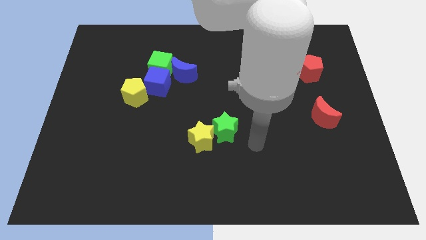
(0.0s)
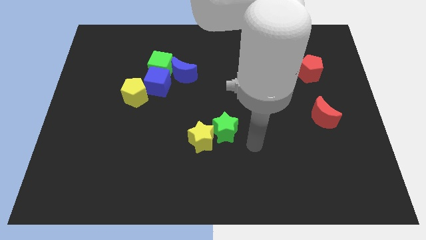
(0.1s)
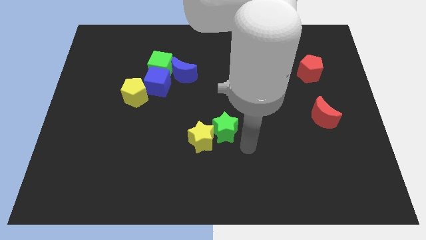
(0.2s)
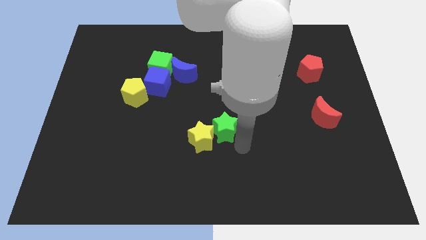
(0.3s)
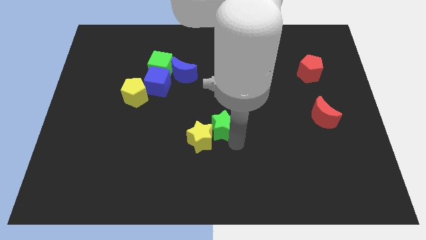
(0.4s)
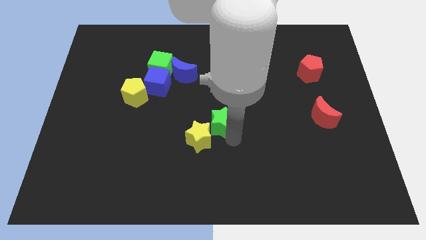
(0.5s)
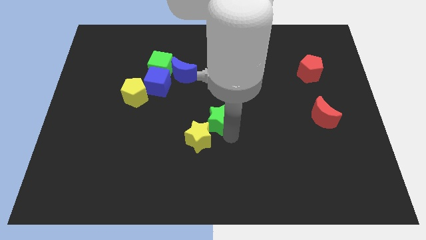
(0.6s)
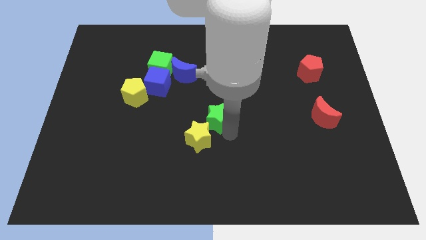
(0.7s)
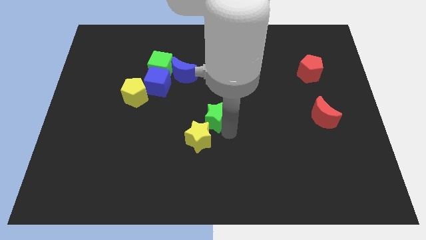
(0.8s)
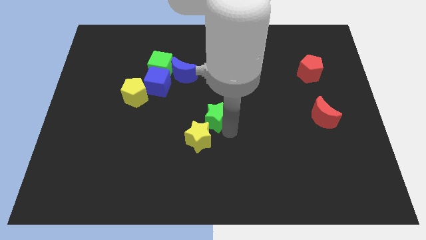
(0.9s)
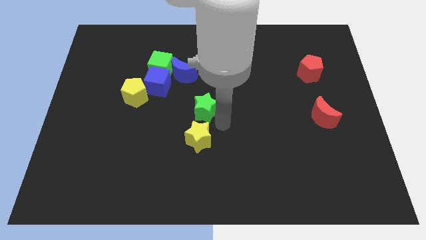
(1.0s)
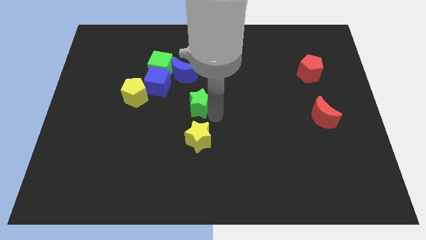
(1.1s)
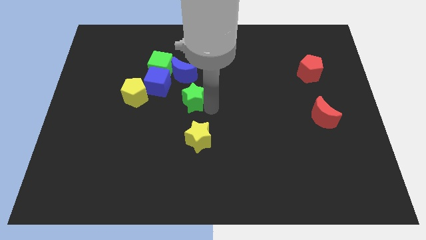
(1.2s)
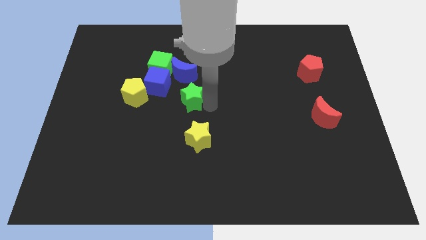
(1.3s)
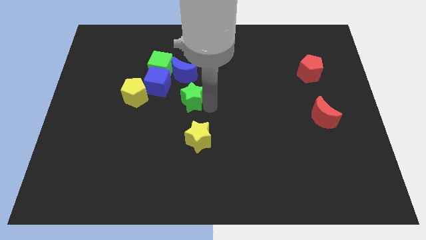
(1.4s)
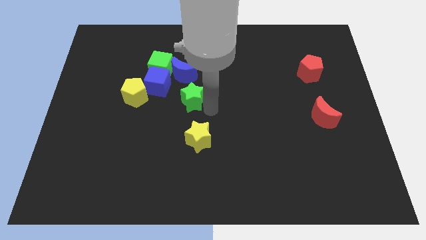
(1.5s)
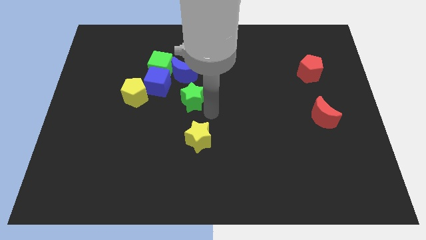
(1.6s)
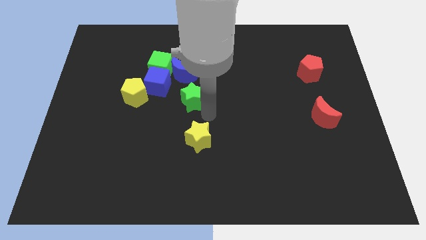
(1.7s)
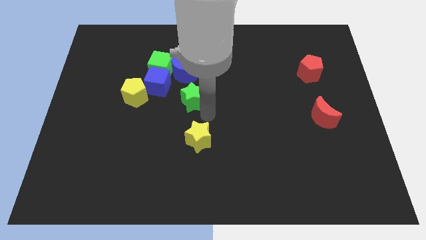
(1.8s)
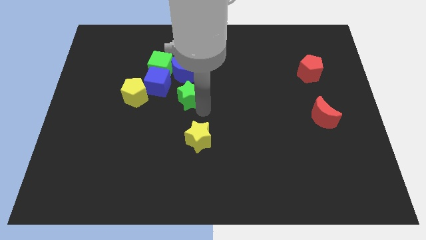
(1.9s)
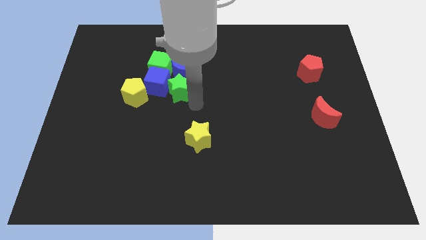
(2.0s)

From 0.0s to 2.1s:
move green star below blue moon

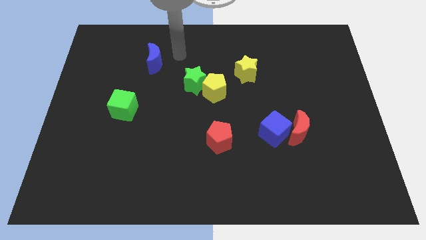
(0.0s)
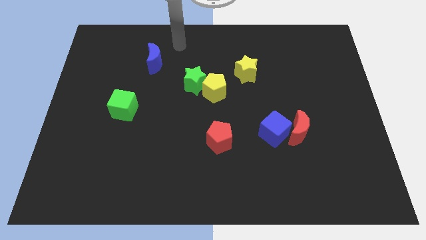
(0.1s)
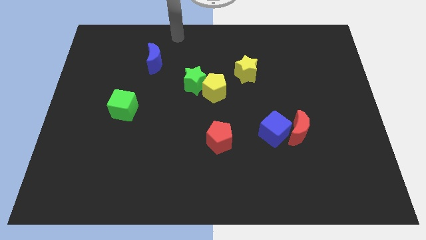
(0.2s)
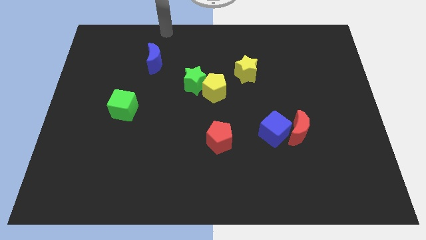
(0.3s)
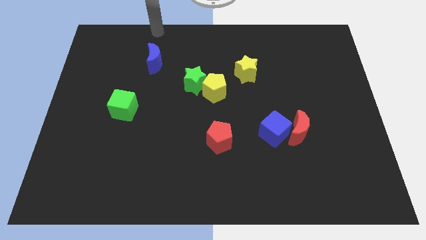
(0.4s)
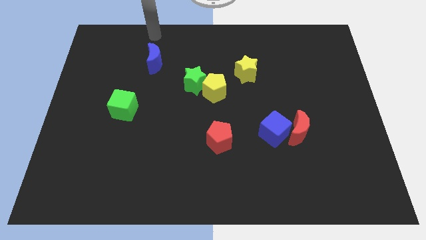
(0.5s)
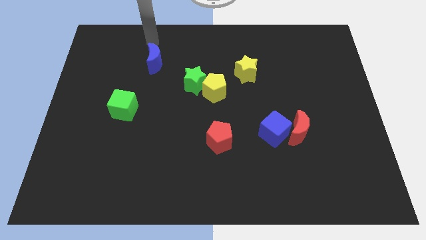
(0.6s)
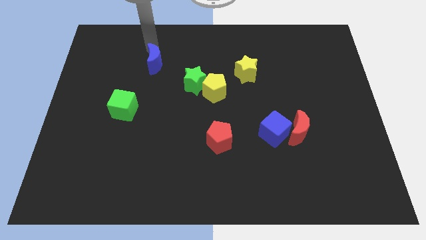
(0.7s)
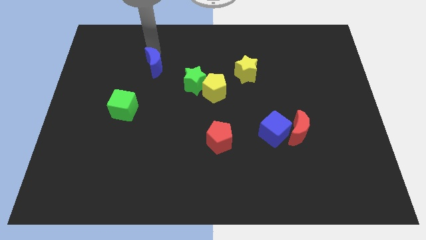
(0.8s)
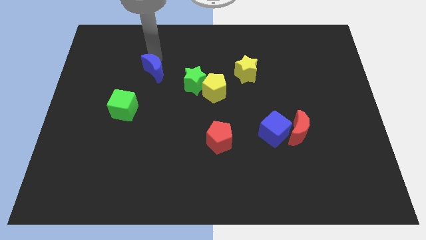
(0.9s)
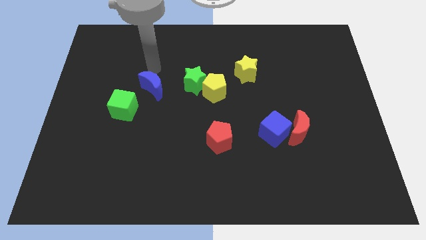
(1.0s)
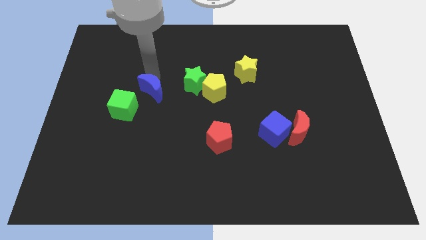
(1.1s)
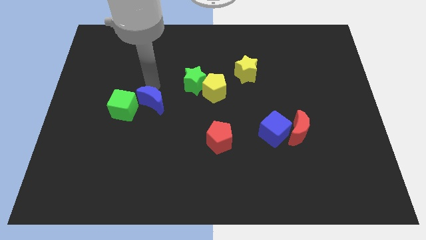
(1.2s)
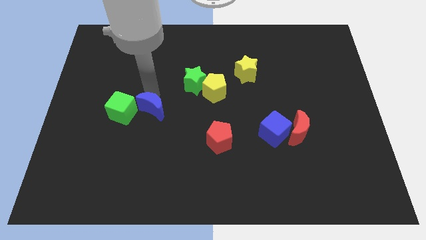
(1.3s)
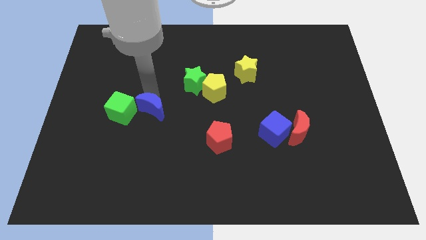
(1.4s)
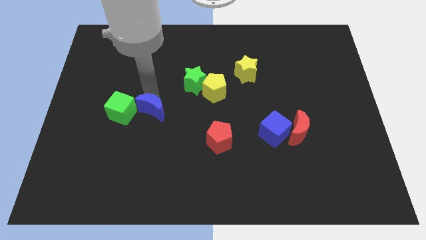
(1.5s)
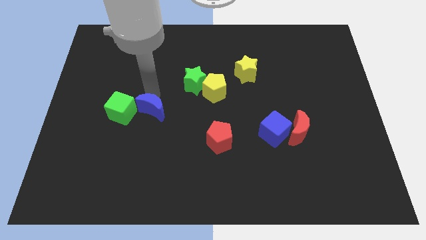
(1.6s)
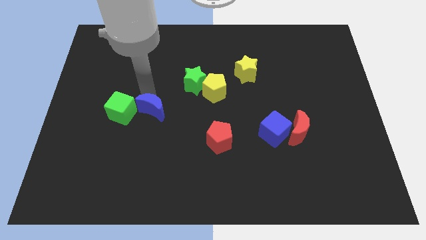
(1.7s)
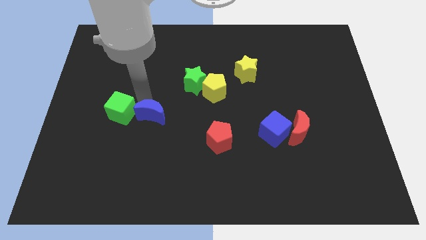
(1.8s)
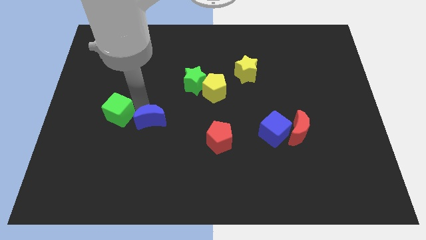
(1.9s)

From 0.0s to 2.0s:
push blue crescent beside green cube

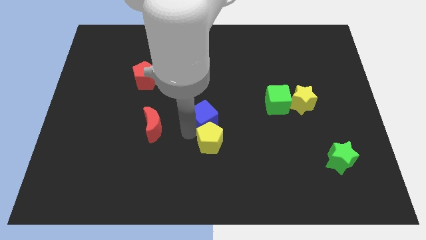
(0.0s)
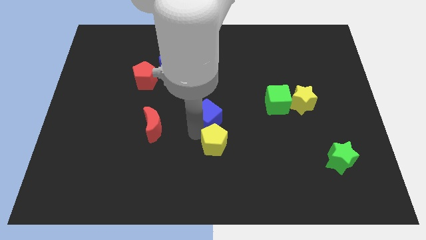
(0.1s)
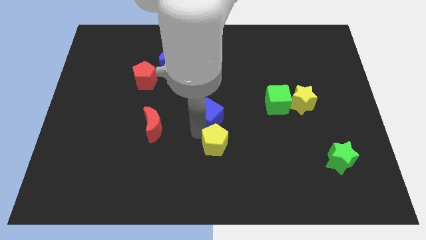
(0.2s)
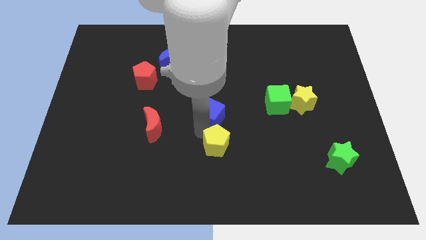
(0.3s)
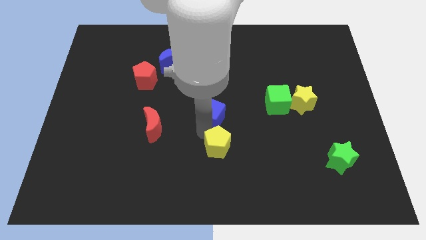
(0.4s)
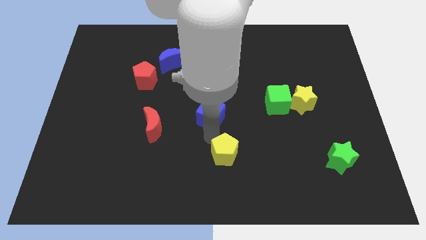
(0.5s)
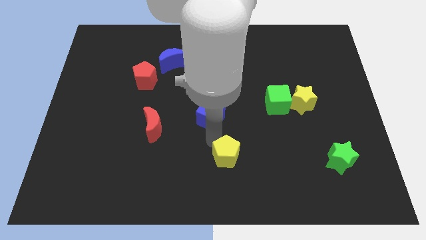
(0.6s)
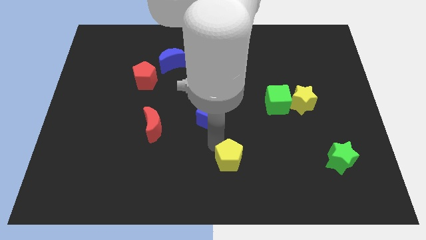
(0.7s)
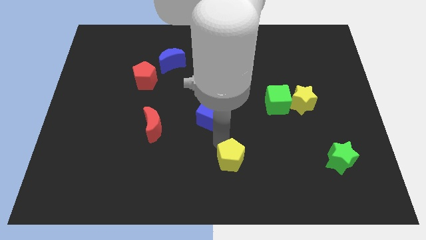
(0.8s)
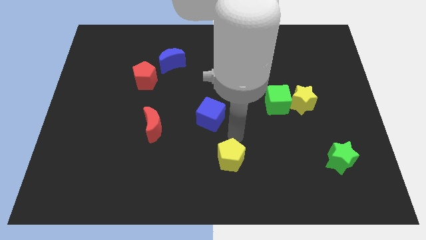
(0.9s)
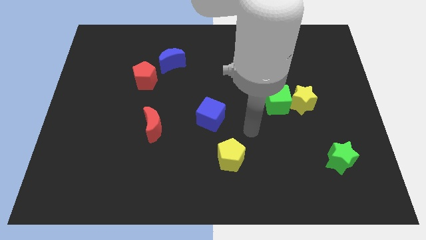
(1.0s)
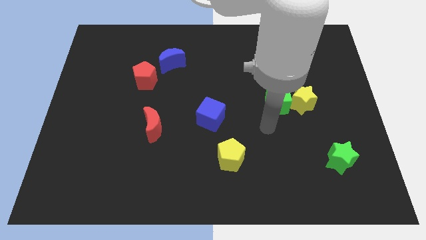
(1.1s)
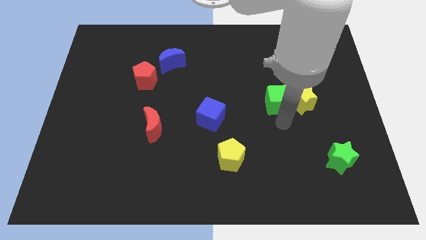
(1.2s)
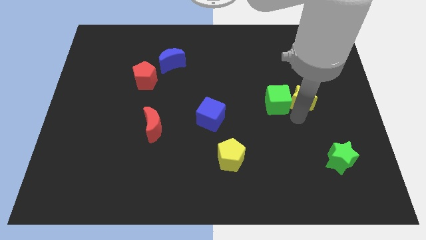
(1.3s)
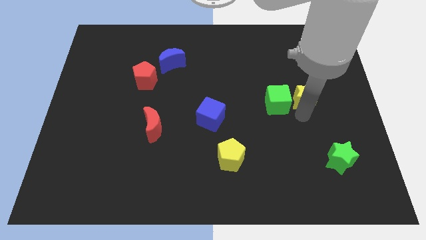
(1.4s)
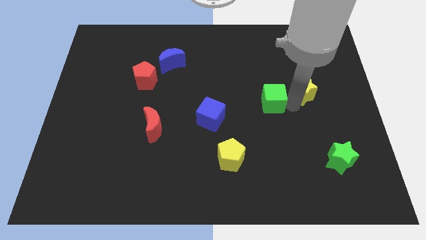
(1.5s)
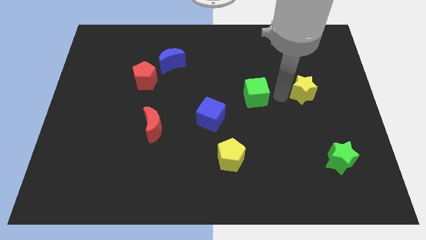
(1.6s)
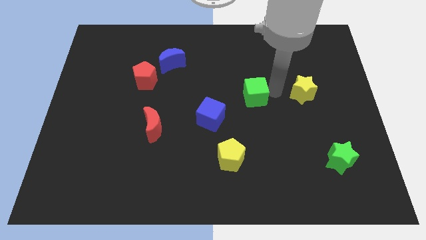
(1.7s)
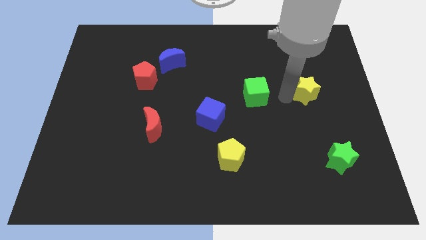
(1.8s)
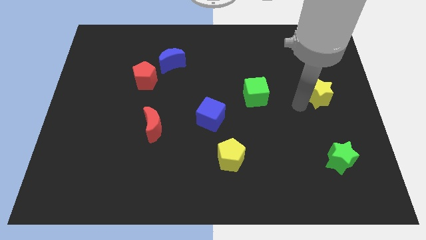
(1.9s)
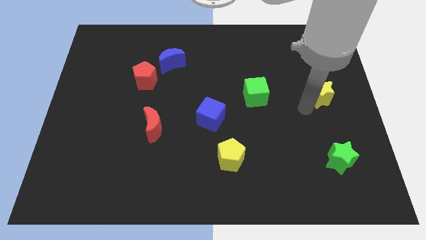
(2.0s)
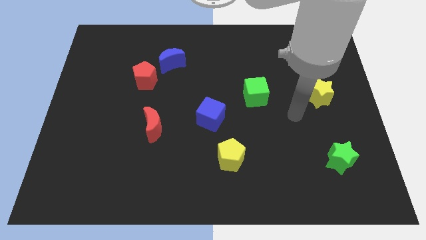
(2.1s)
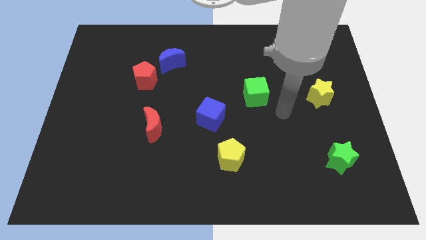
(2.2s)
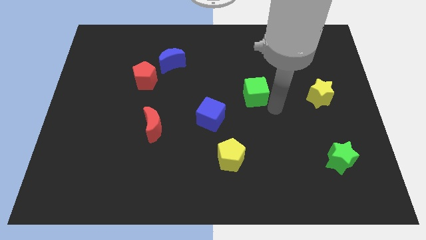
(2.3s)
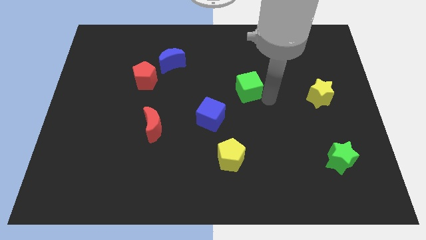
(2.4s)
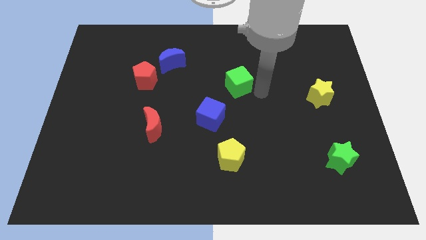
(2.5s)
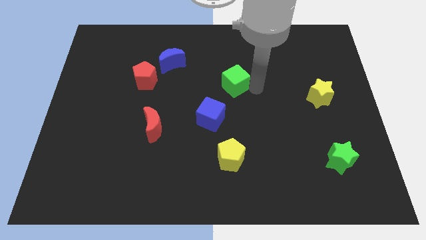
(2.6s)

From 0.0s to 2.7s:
push green cube above yellow pentagon

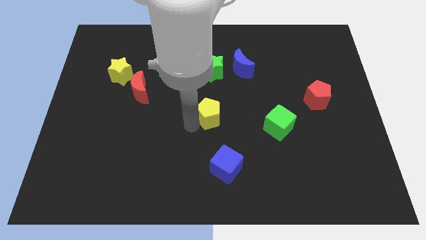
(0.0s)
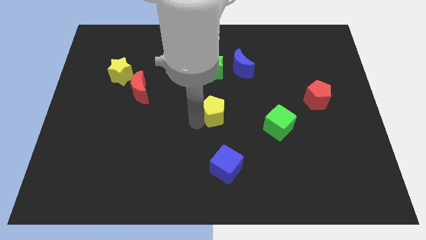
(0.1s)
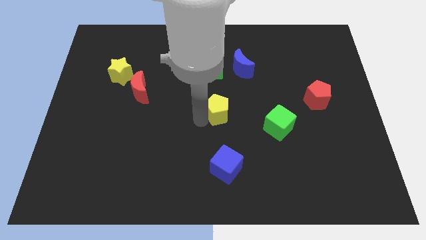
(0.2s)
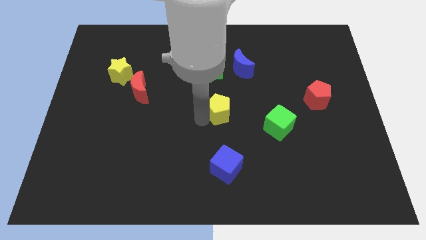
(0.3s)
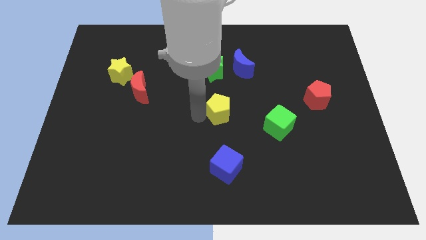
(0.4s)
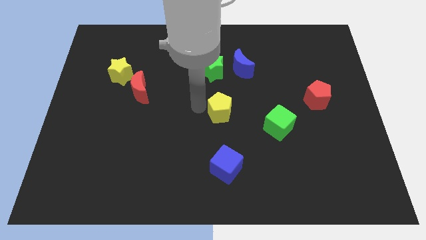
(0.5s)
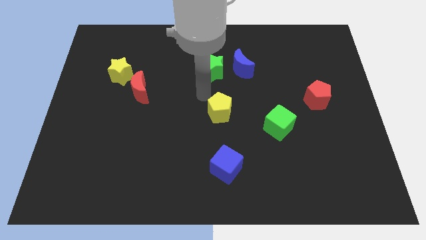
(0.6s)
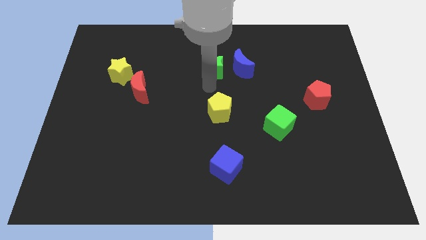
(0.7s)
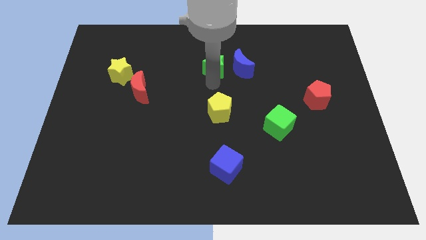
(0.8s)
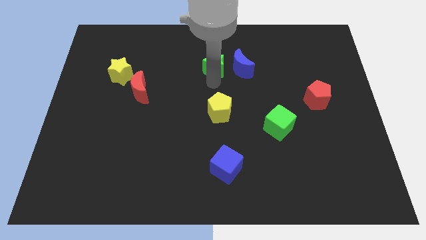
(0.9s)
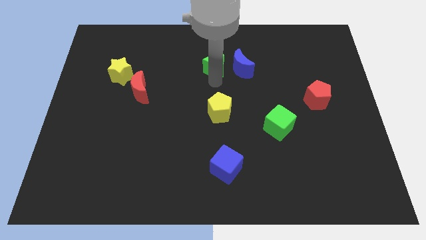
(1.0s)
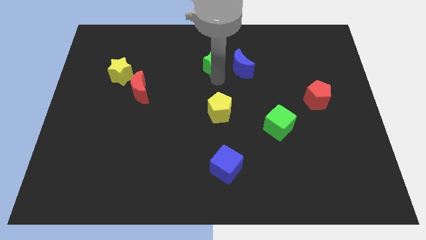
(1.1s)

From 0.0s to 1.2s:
move your arm close to the green star

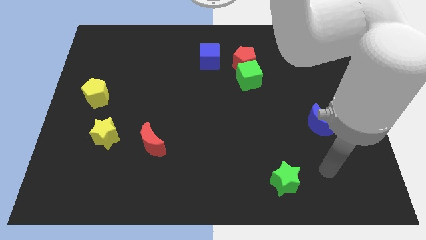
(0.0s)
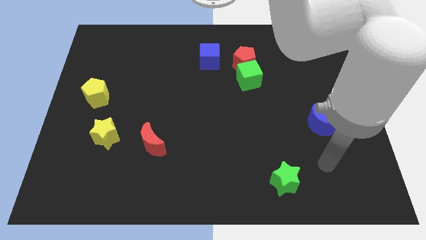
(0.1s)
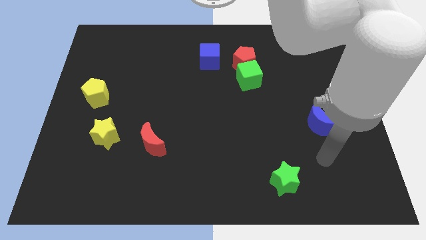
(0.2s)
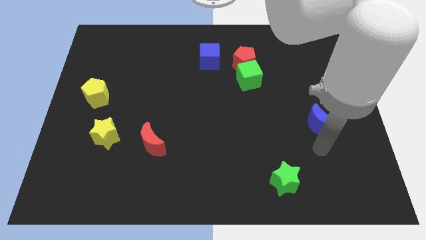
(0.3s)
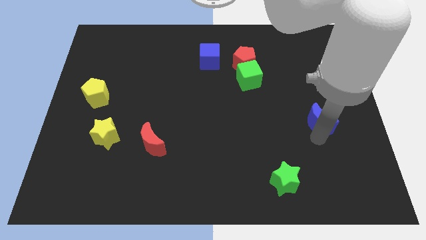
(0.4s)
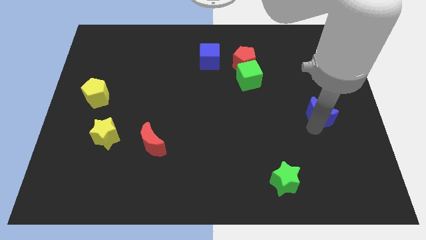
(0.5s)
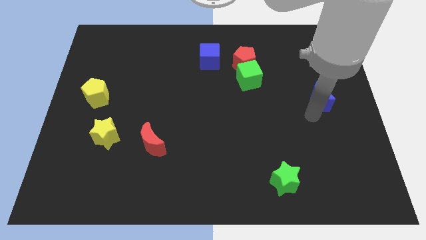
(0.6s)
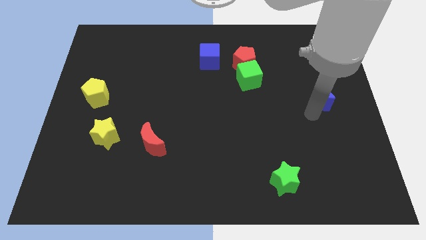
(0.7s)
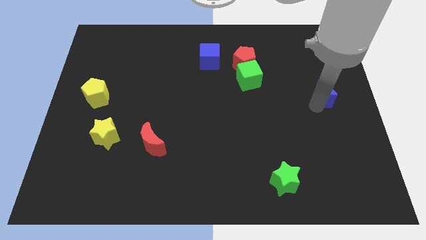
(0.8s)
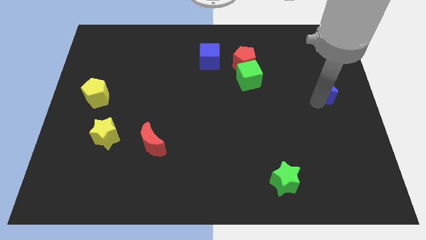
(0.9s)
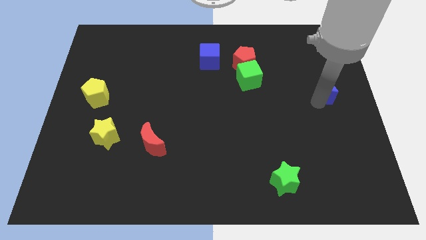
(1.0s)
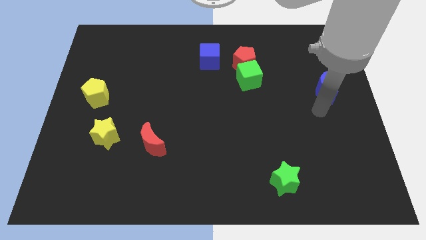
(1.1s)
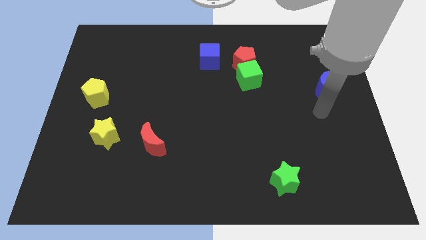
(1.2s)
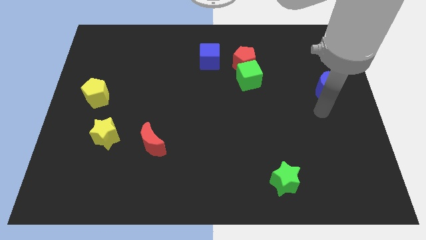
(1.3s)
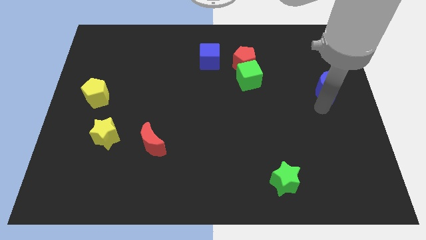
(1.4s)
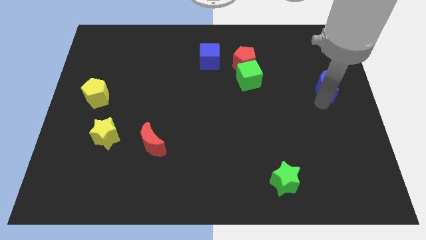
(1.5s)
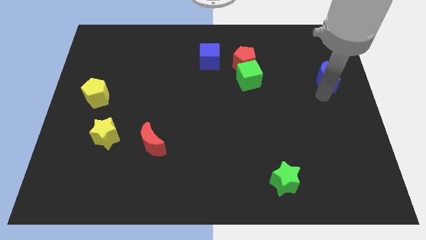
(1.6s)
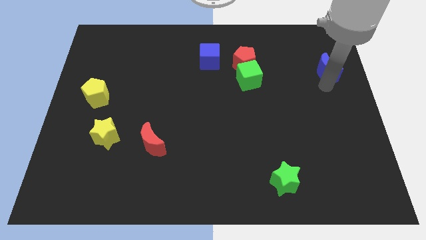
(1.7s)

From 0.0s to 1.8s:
push the blue moon to the top
